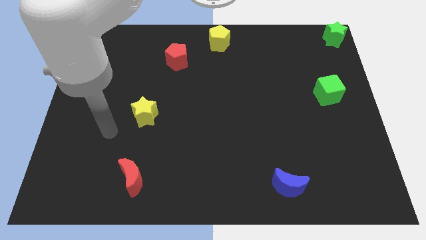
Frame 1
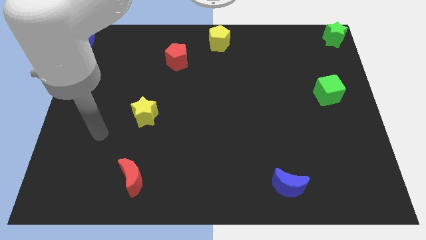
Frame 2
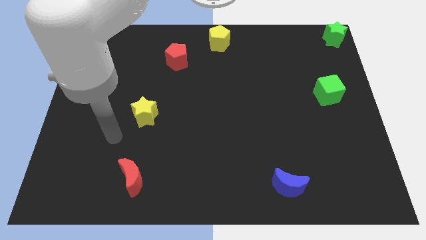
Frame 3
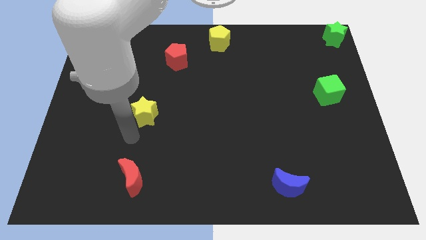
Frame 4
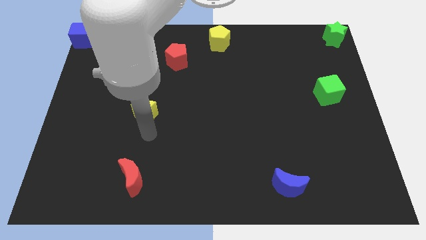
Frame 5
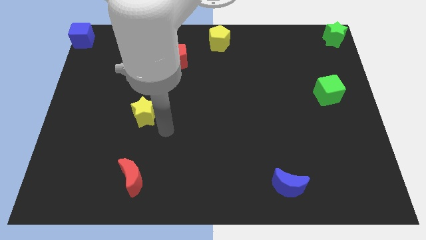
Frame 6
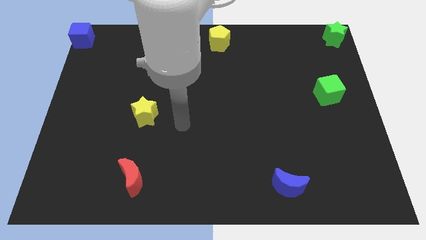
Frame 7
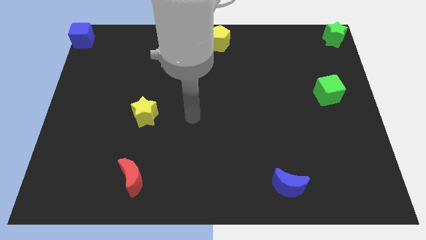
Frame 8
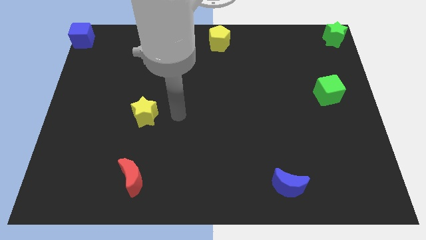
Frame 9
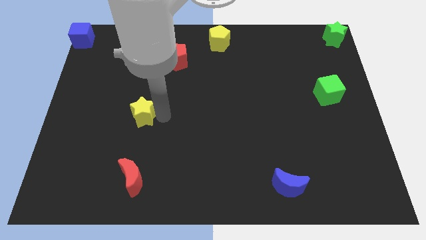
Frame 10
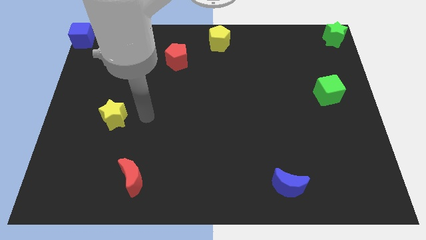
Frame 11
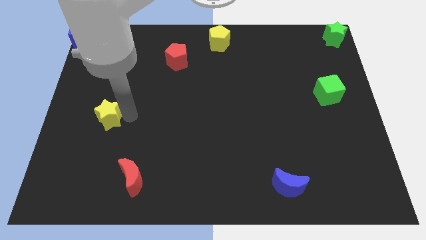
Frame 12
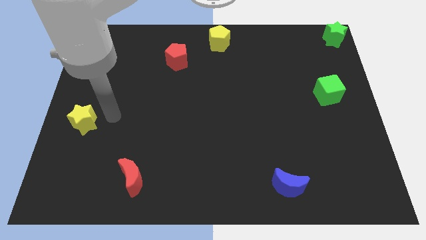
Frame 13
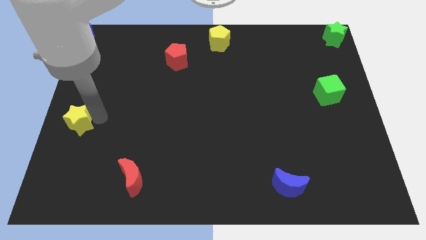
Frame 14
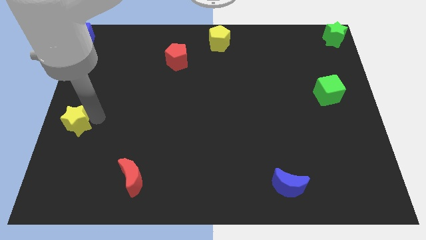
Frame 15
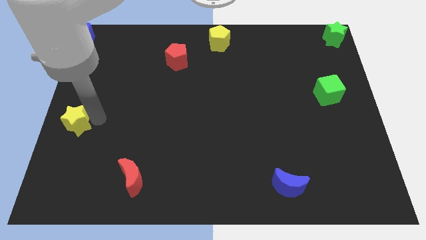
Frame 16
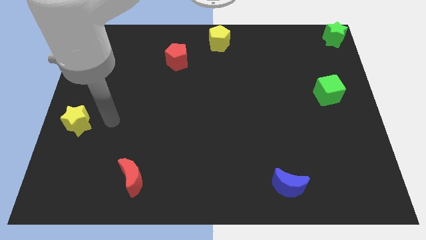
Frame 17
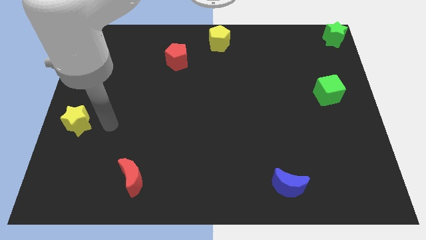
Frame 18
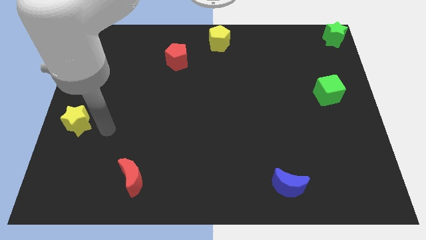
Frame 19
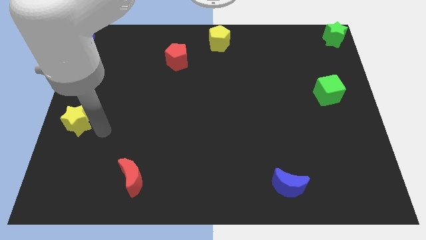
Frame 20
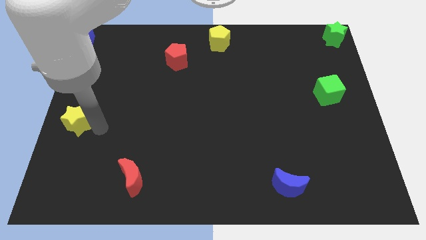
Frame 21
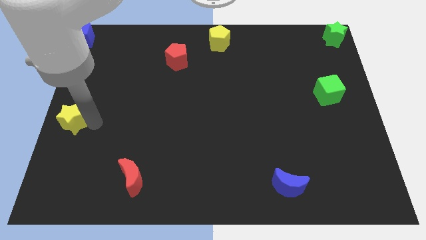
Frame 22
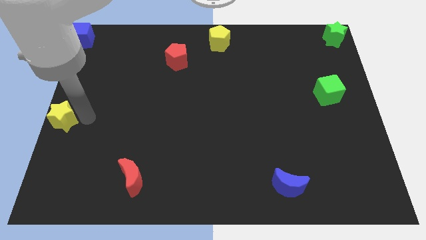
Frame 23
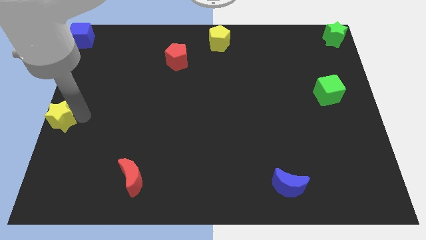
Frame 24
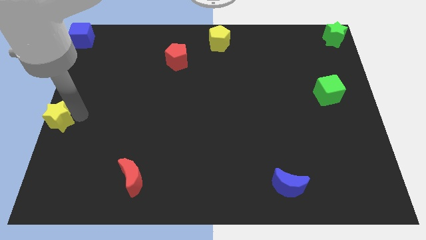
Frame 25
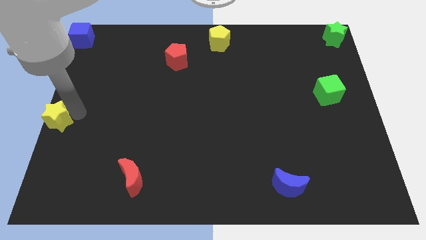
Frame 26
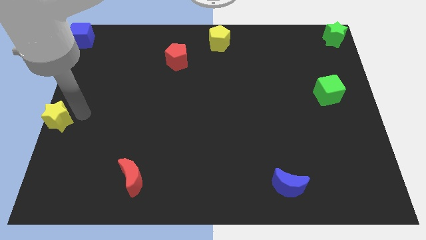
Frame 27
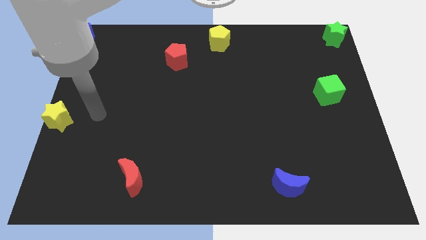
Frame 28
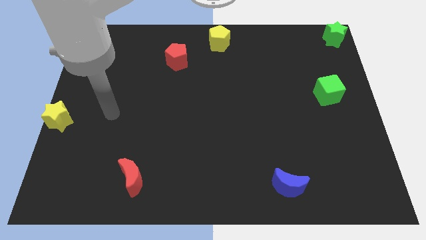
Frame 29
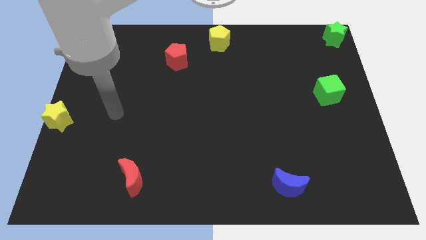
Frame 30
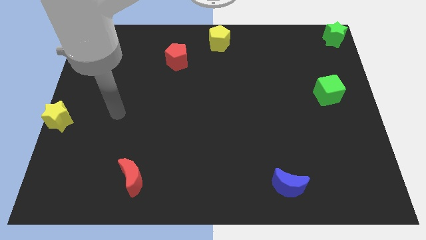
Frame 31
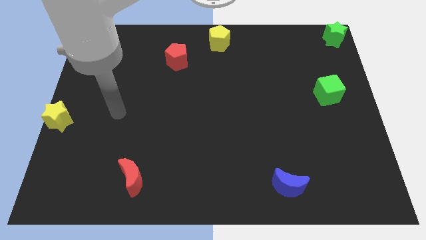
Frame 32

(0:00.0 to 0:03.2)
push the yellow star to the left side of the board

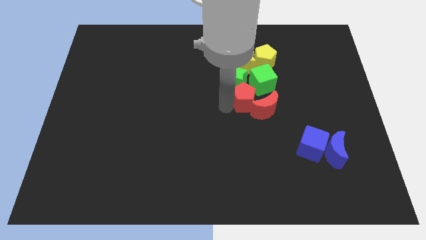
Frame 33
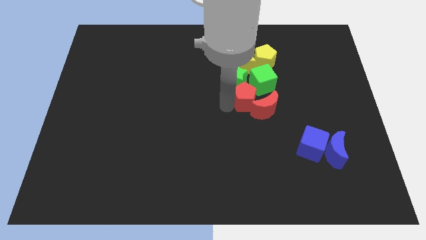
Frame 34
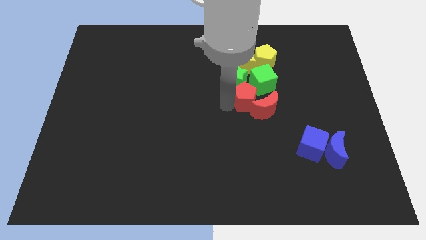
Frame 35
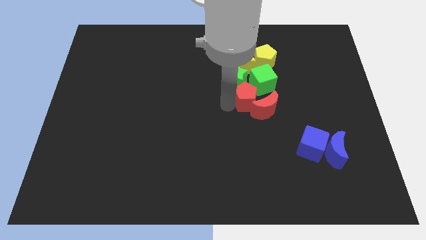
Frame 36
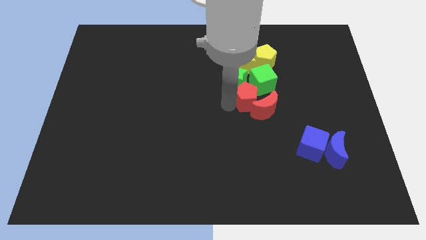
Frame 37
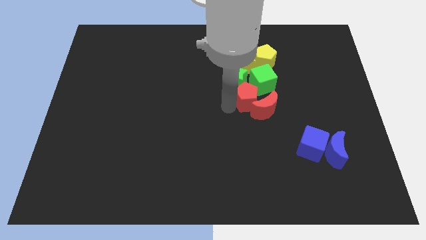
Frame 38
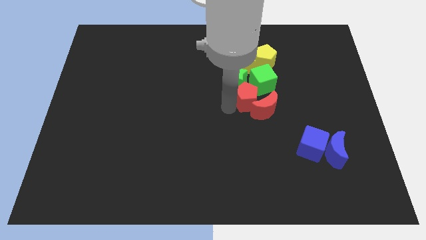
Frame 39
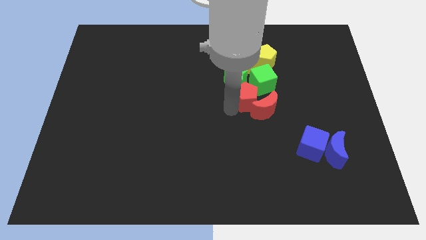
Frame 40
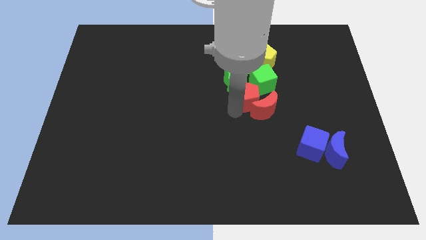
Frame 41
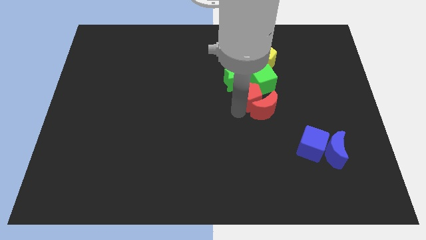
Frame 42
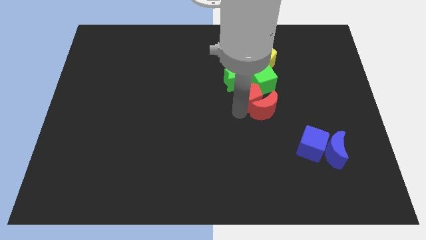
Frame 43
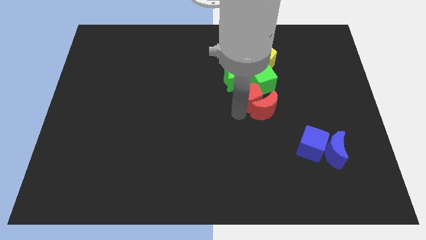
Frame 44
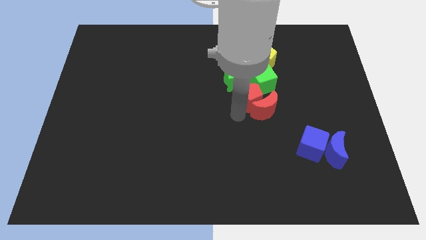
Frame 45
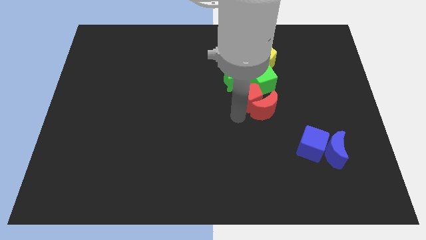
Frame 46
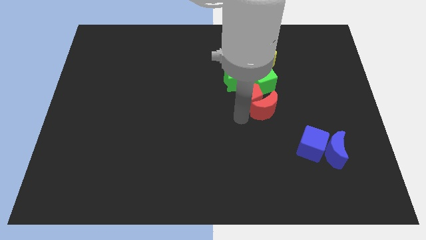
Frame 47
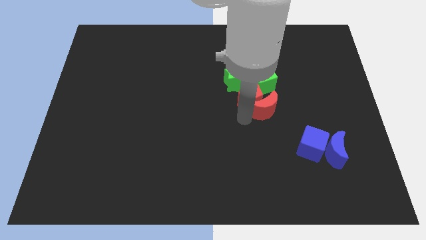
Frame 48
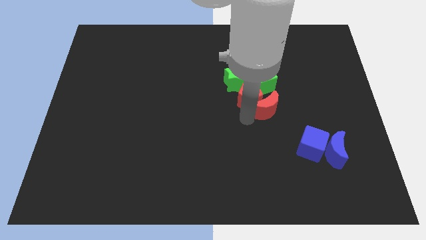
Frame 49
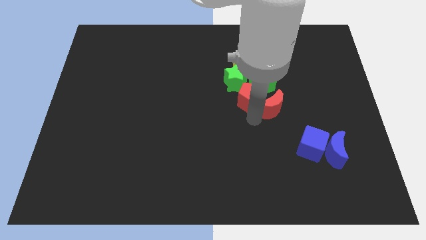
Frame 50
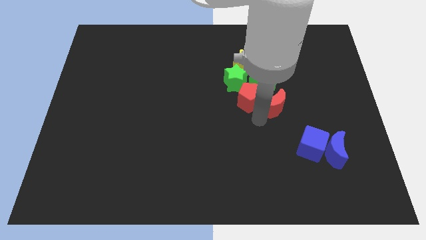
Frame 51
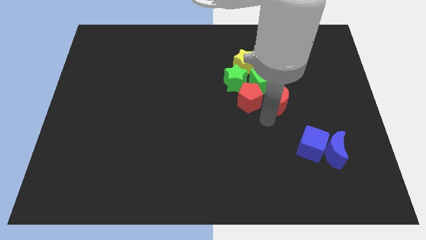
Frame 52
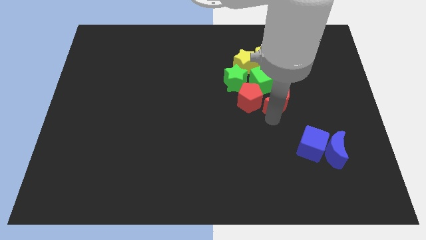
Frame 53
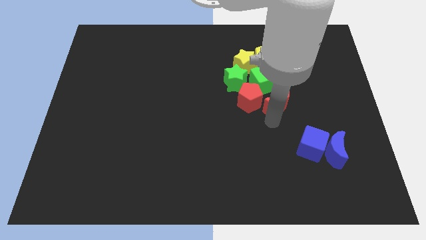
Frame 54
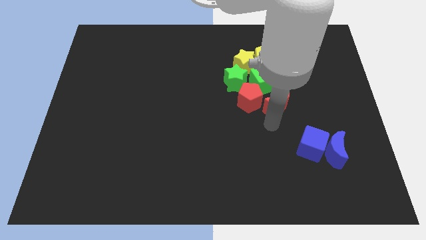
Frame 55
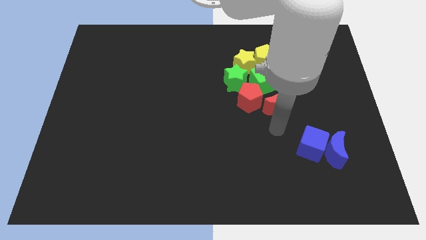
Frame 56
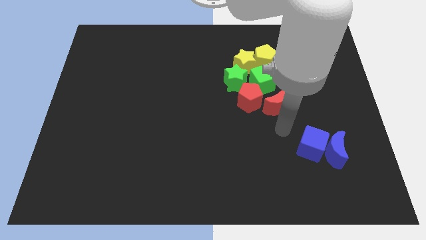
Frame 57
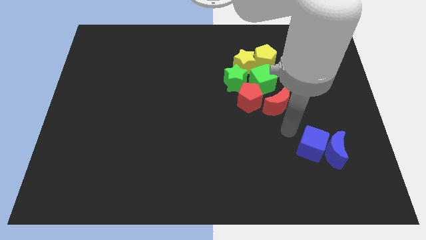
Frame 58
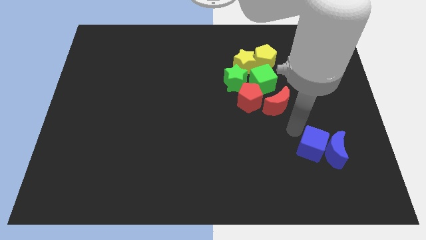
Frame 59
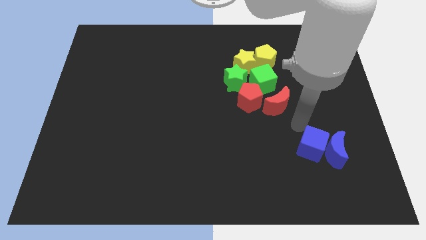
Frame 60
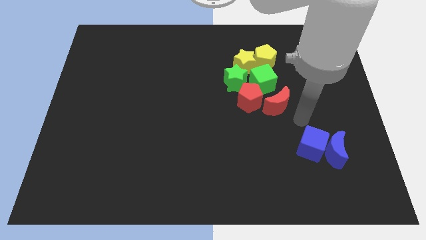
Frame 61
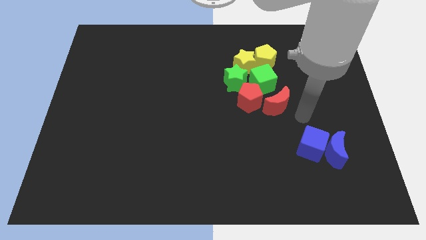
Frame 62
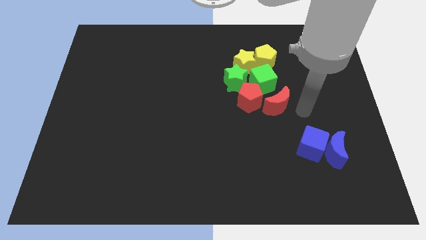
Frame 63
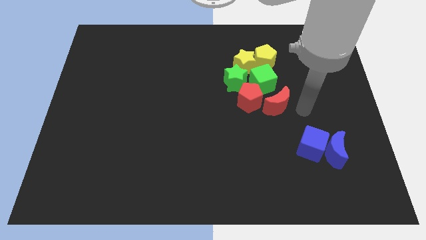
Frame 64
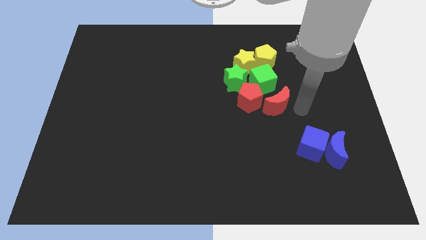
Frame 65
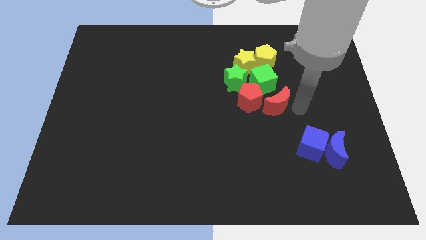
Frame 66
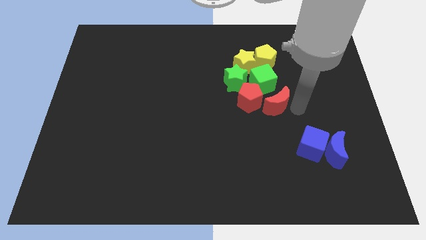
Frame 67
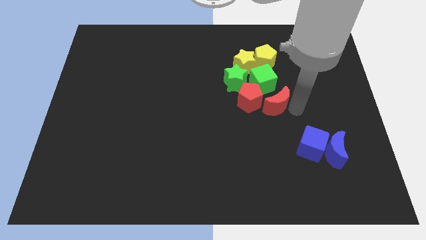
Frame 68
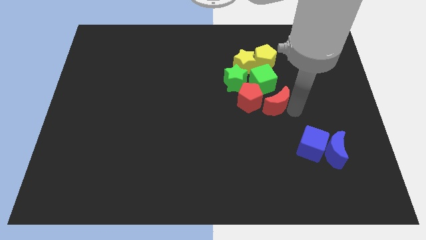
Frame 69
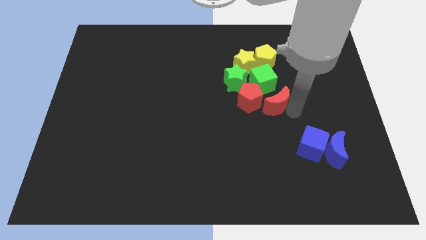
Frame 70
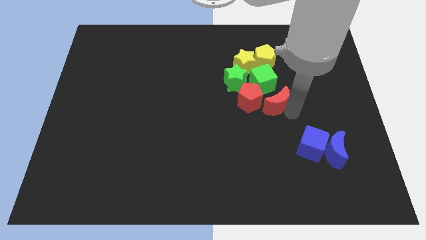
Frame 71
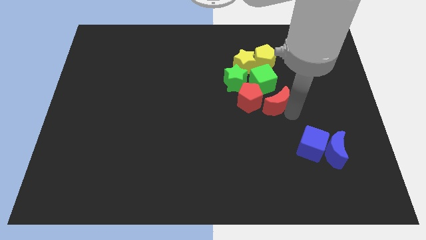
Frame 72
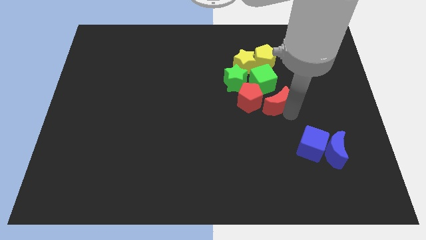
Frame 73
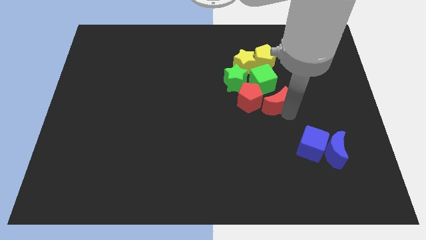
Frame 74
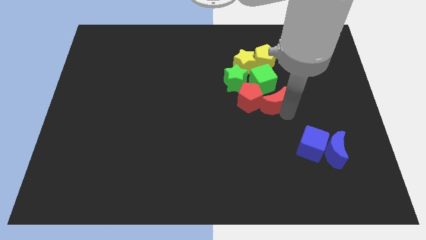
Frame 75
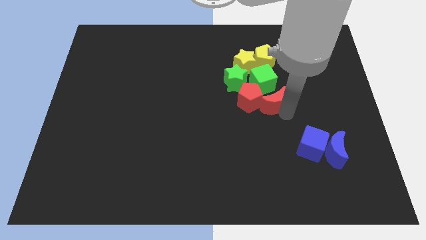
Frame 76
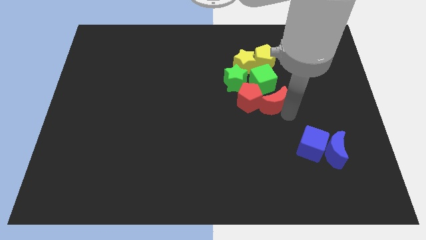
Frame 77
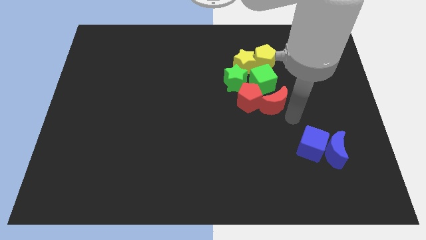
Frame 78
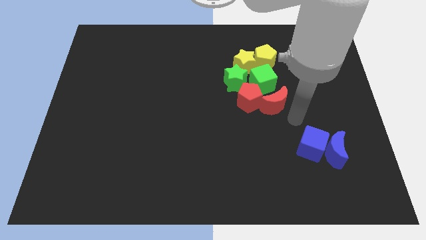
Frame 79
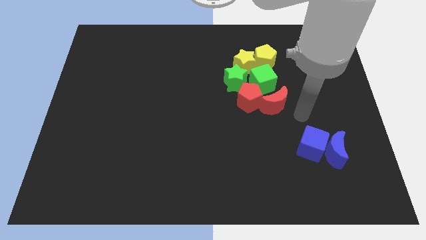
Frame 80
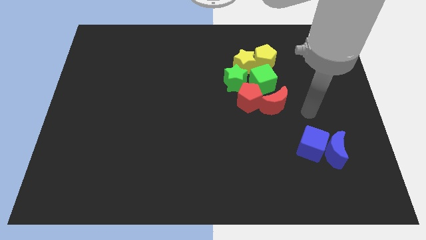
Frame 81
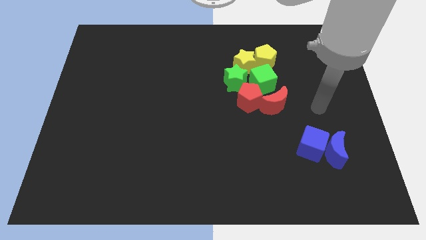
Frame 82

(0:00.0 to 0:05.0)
push red pentagon into green star

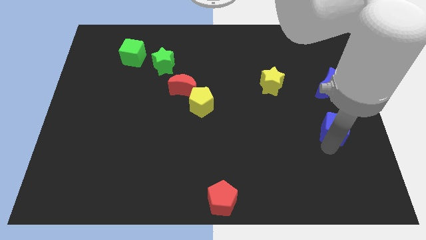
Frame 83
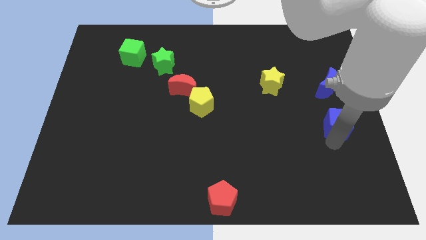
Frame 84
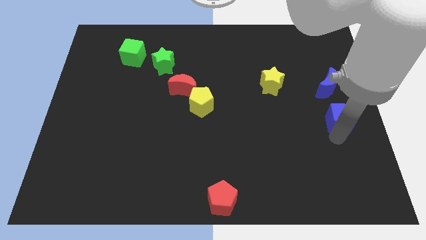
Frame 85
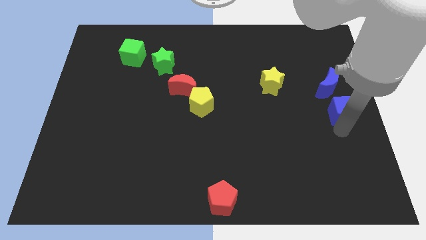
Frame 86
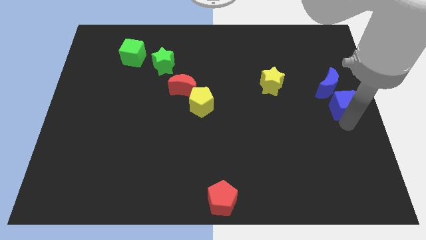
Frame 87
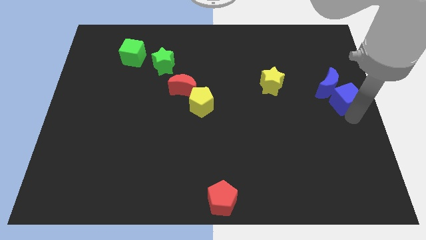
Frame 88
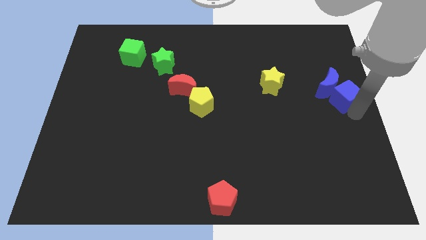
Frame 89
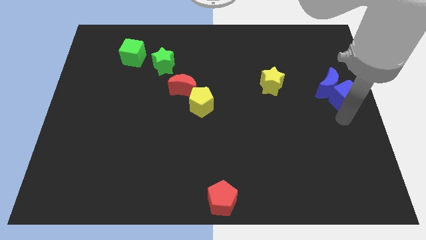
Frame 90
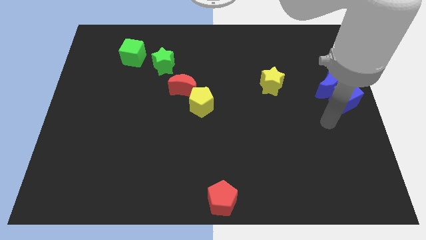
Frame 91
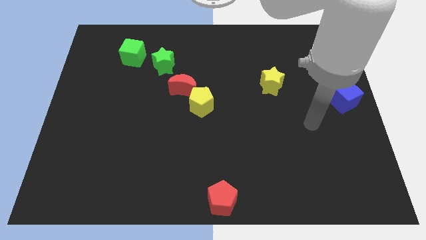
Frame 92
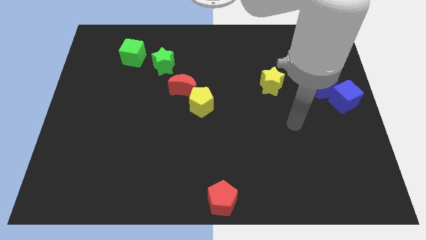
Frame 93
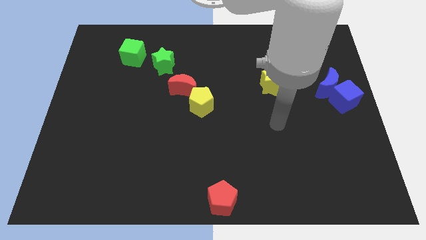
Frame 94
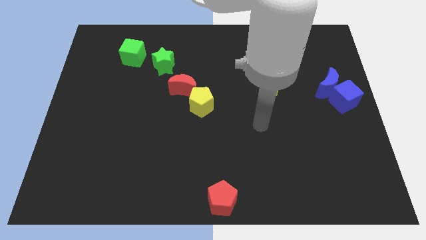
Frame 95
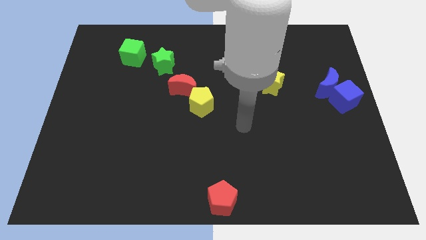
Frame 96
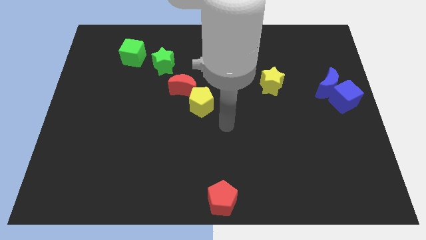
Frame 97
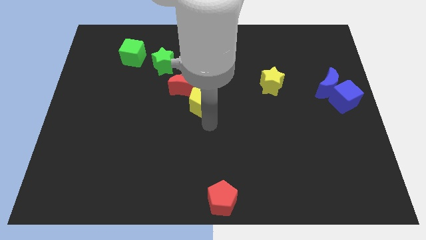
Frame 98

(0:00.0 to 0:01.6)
move the blue cube close to the blue crescent
